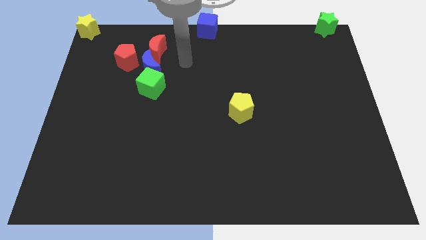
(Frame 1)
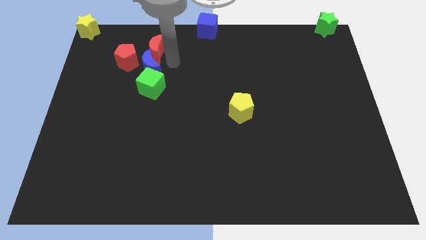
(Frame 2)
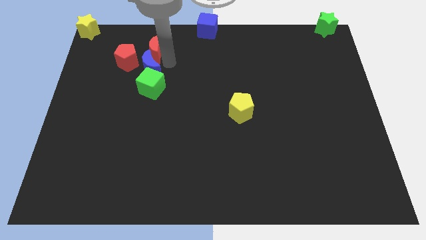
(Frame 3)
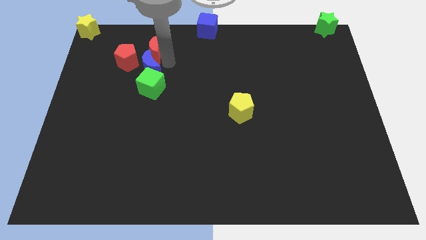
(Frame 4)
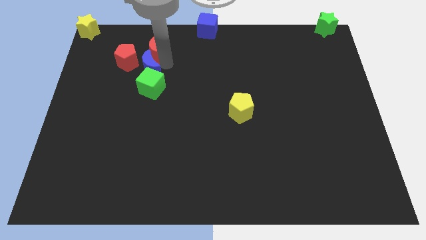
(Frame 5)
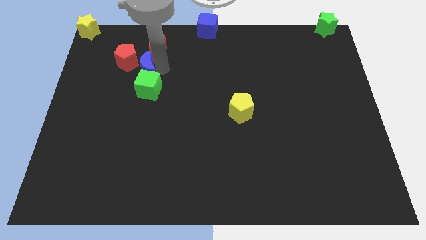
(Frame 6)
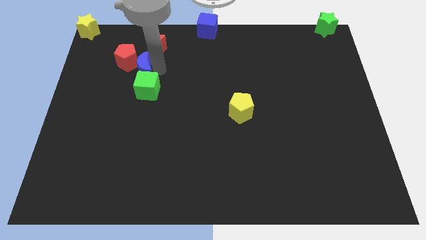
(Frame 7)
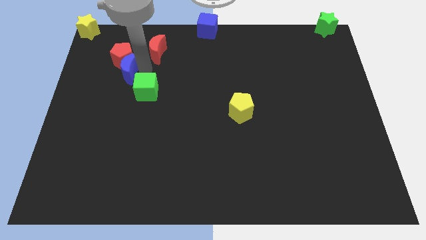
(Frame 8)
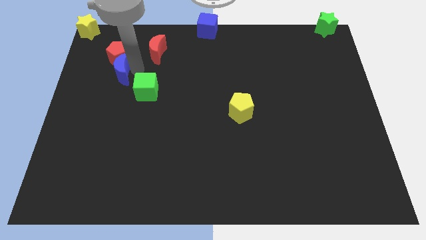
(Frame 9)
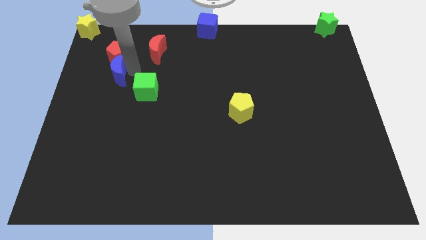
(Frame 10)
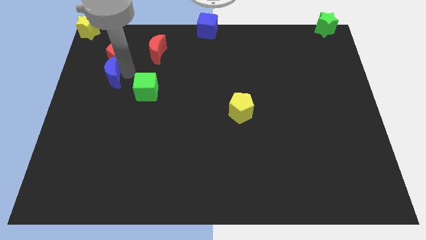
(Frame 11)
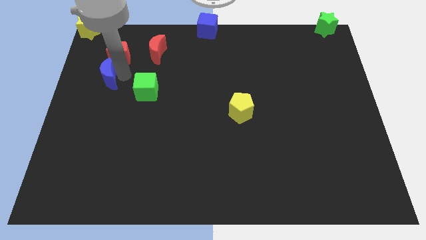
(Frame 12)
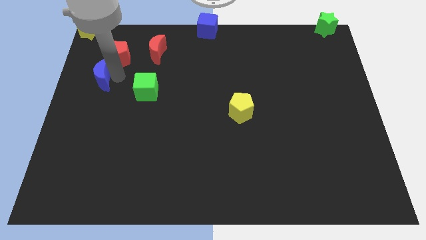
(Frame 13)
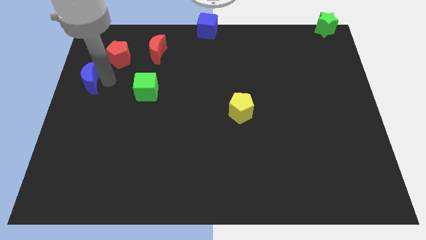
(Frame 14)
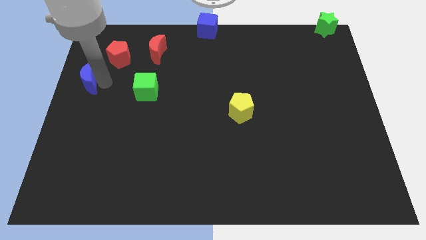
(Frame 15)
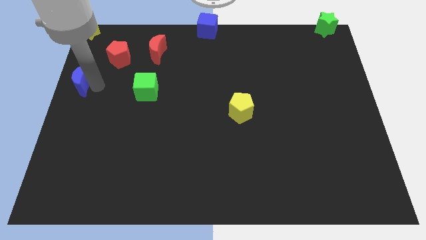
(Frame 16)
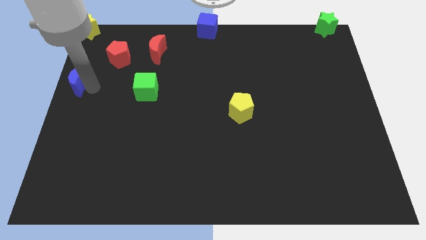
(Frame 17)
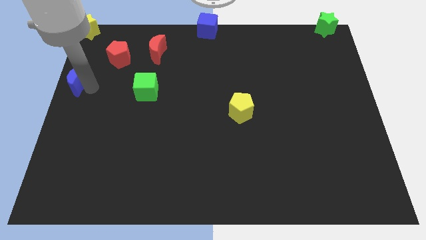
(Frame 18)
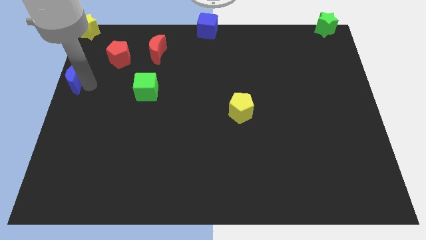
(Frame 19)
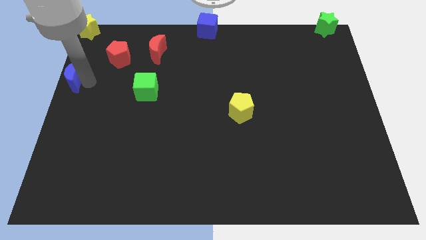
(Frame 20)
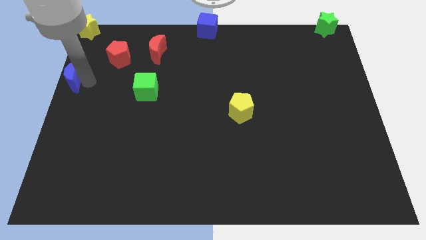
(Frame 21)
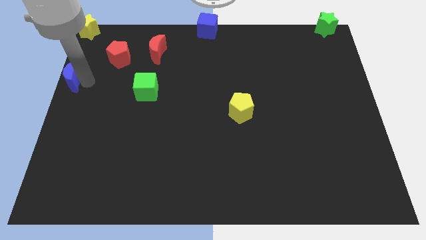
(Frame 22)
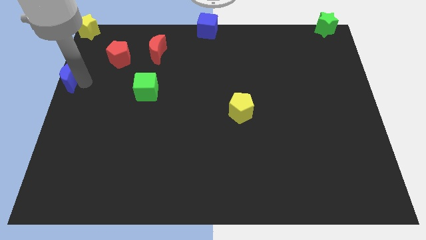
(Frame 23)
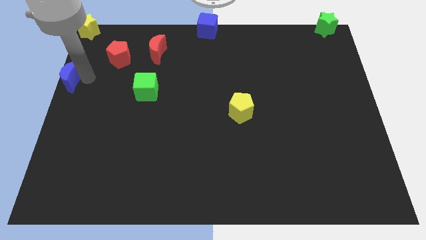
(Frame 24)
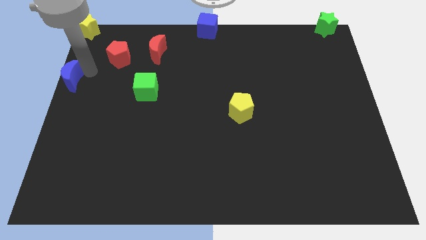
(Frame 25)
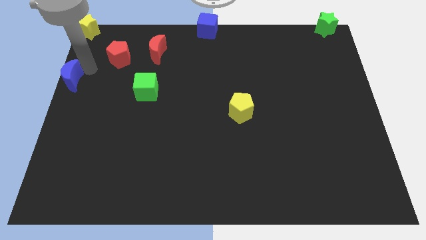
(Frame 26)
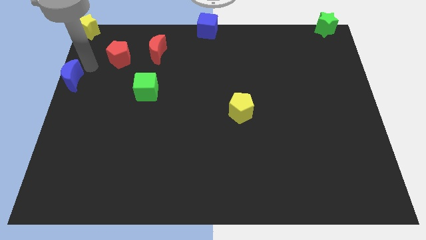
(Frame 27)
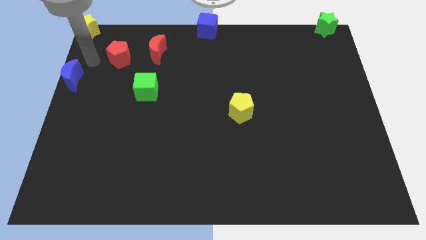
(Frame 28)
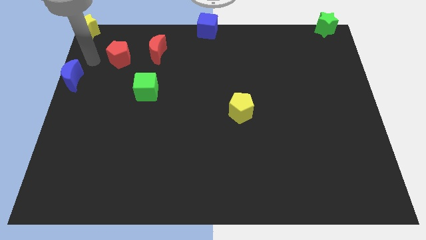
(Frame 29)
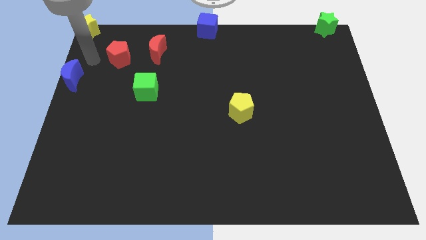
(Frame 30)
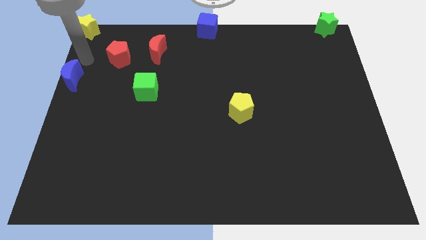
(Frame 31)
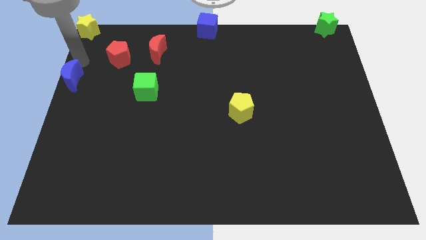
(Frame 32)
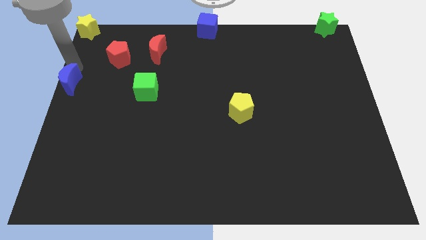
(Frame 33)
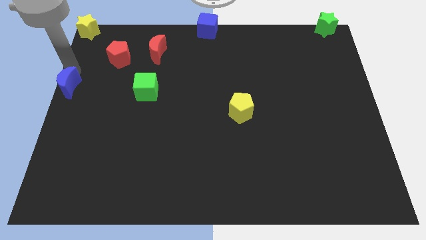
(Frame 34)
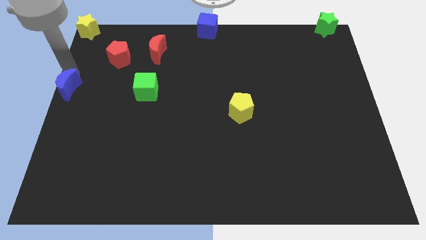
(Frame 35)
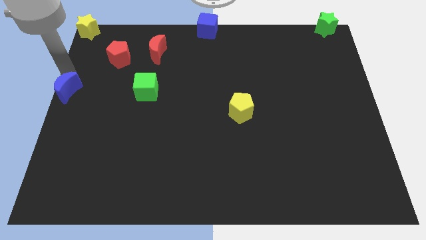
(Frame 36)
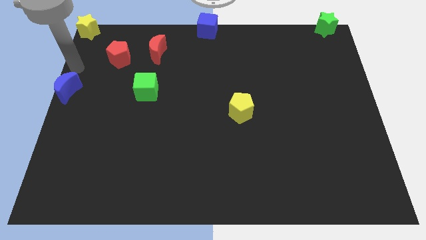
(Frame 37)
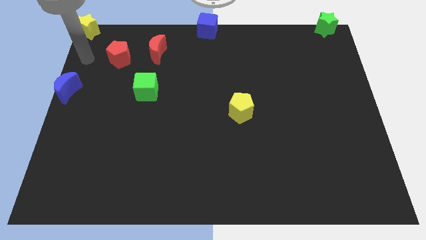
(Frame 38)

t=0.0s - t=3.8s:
move blue moon towards middle left of the board

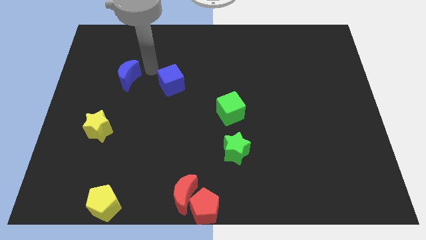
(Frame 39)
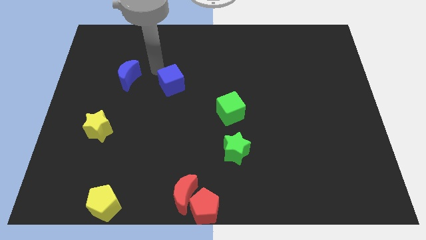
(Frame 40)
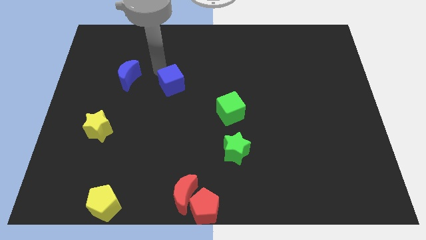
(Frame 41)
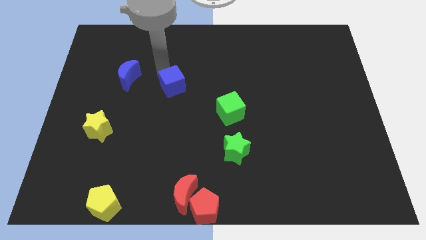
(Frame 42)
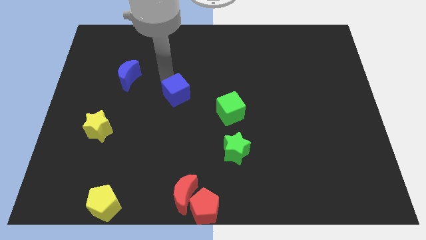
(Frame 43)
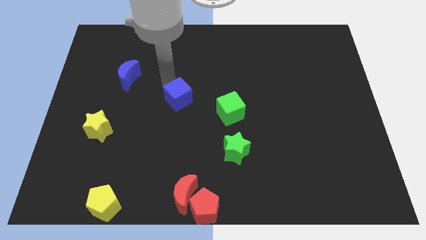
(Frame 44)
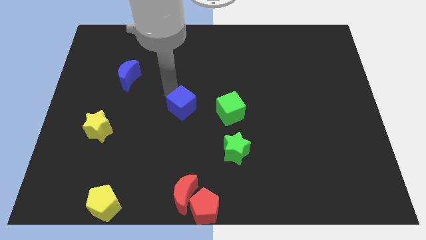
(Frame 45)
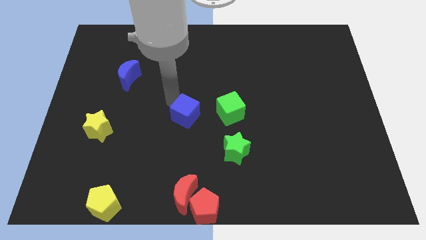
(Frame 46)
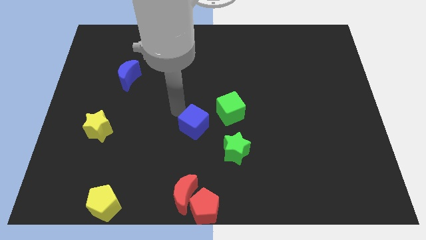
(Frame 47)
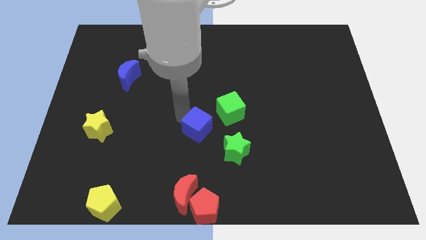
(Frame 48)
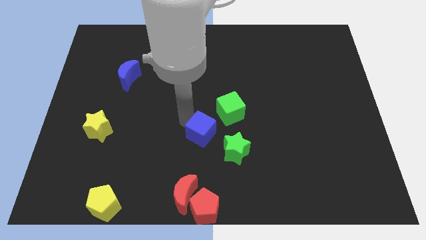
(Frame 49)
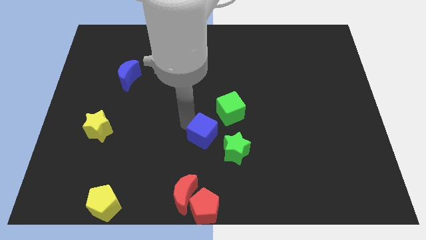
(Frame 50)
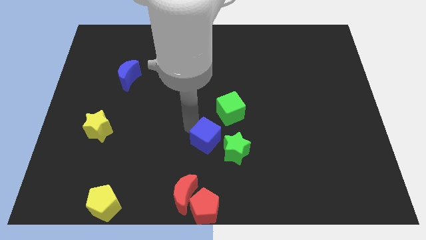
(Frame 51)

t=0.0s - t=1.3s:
push the blue cube close to the green star

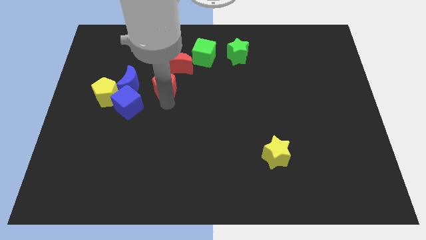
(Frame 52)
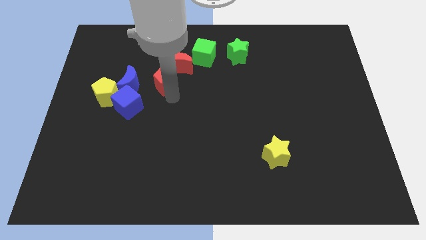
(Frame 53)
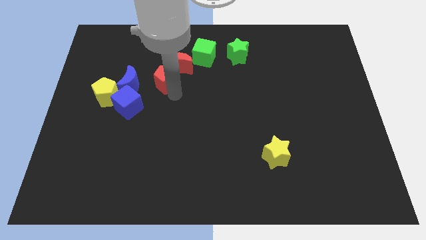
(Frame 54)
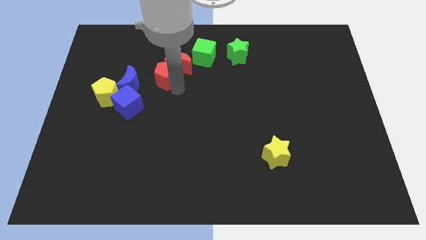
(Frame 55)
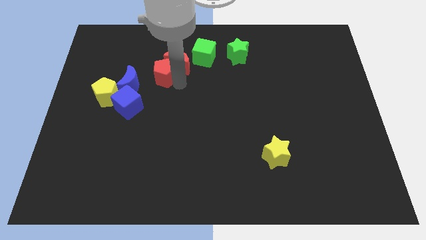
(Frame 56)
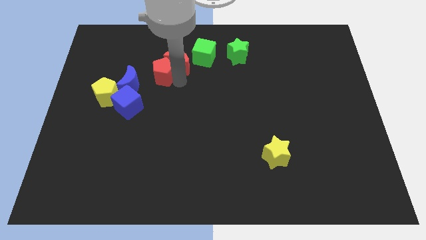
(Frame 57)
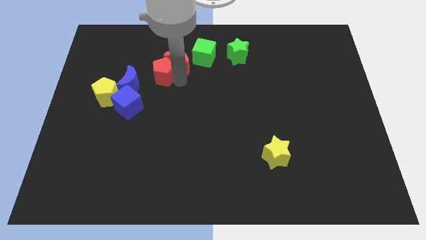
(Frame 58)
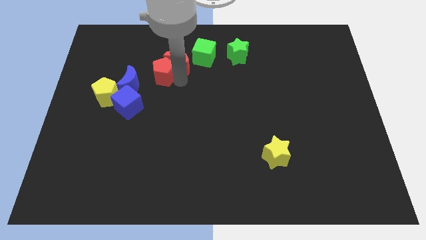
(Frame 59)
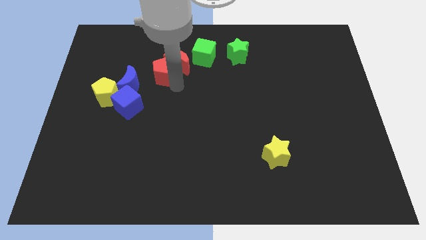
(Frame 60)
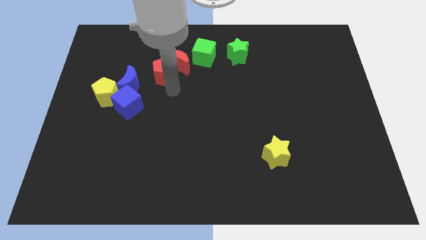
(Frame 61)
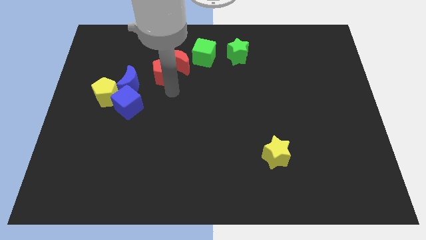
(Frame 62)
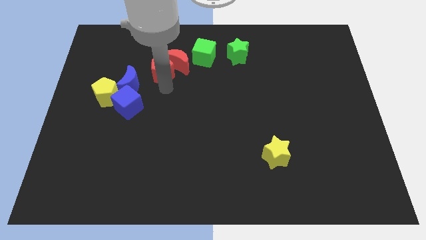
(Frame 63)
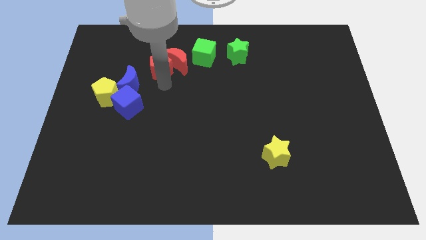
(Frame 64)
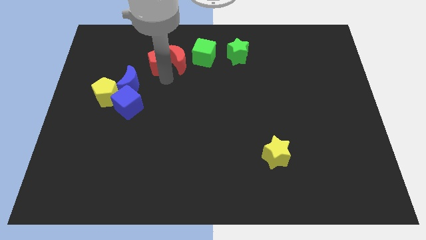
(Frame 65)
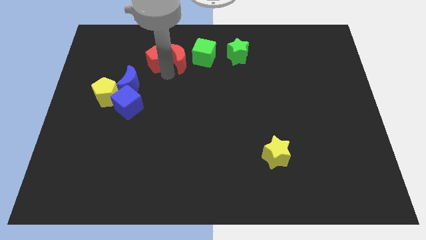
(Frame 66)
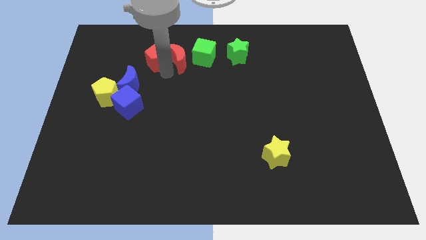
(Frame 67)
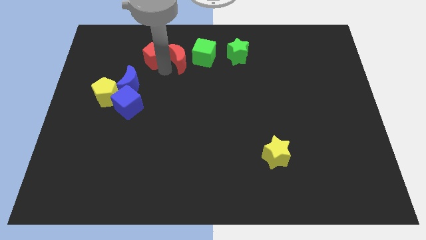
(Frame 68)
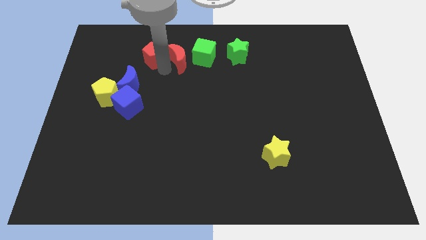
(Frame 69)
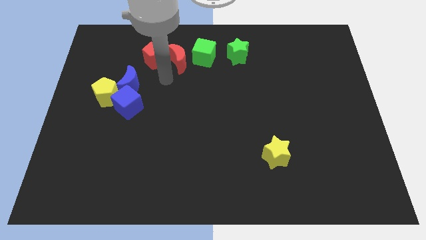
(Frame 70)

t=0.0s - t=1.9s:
drag the red pentagon and place it next to the red crescent

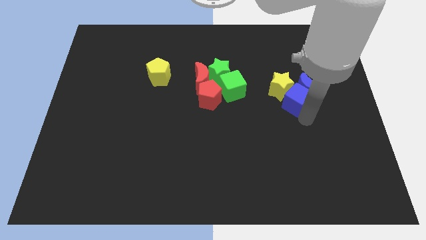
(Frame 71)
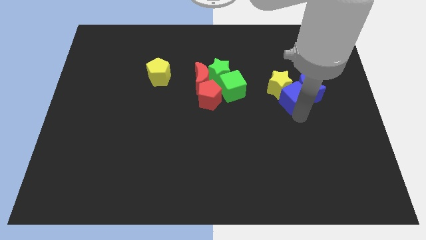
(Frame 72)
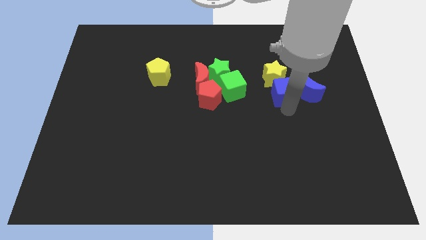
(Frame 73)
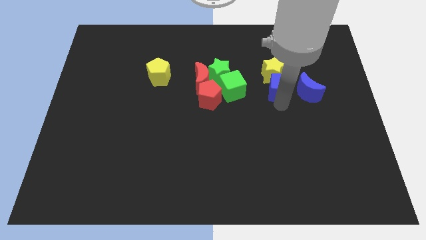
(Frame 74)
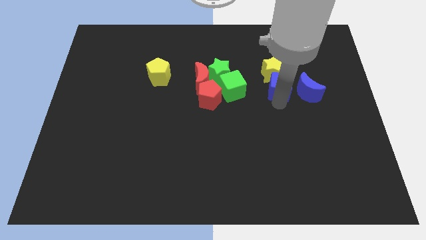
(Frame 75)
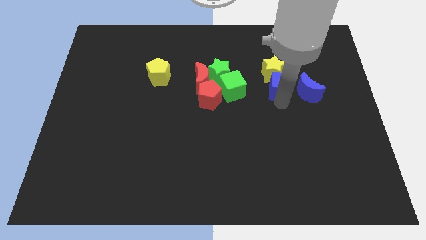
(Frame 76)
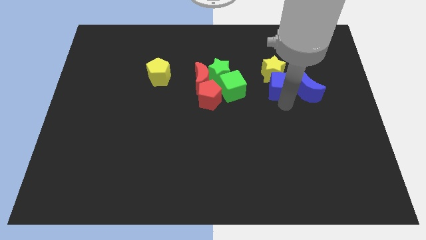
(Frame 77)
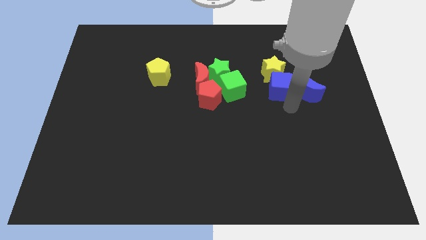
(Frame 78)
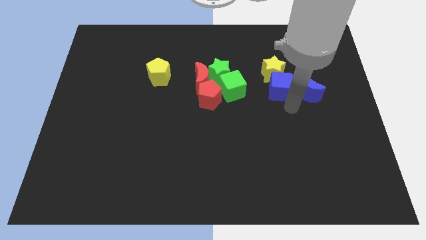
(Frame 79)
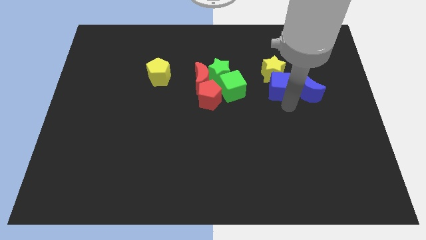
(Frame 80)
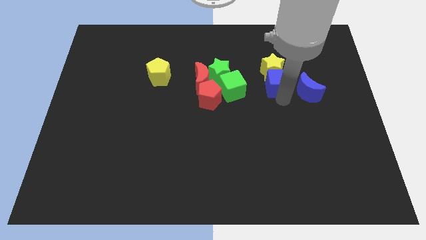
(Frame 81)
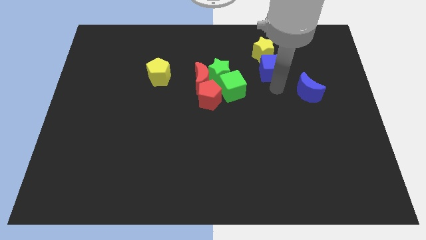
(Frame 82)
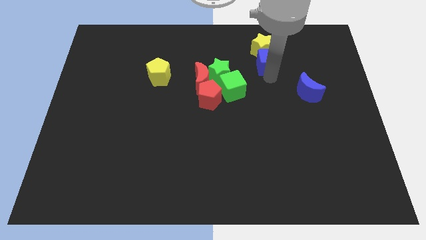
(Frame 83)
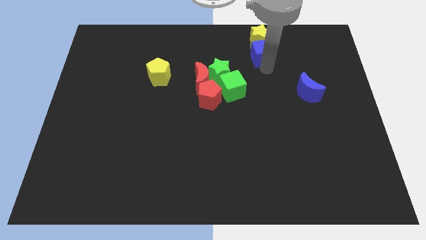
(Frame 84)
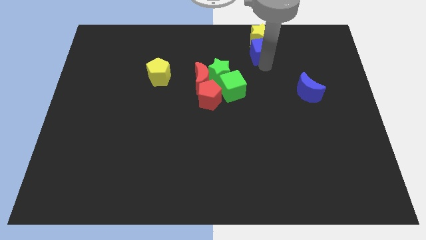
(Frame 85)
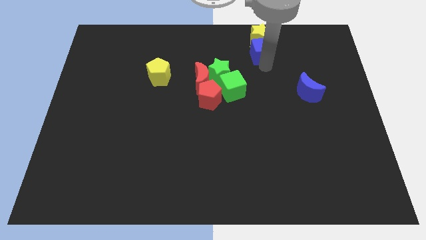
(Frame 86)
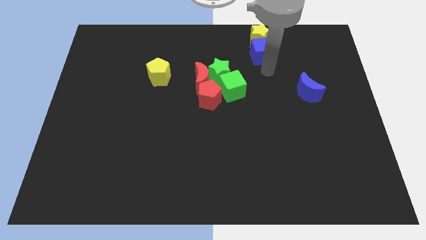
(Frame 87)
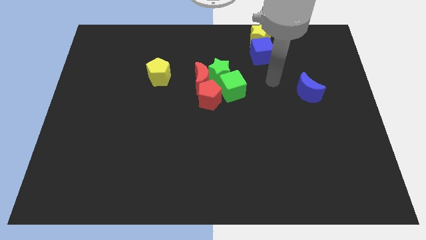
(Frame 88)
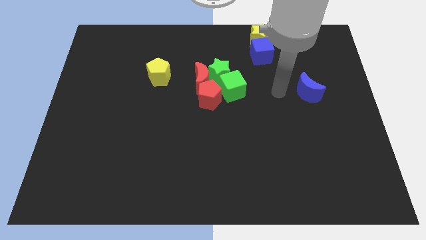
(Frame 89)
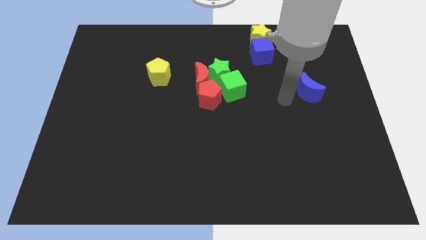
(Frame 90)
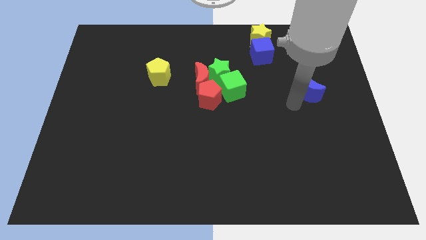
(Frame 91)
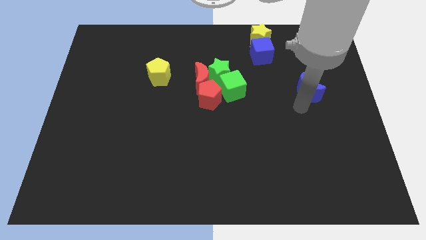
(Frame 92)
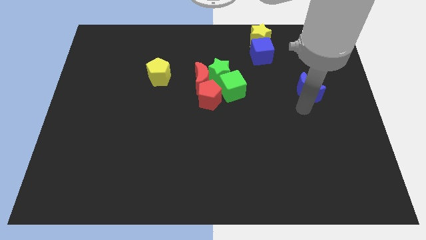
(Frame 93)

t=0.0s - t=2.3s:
push the blue cube slightly to the top right center along with the yellow star
